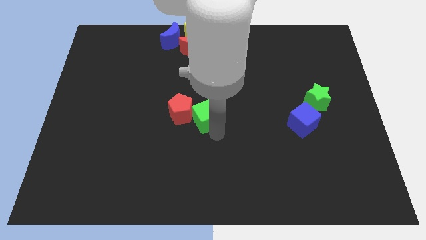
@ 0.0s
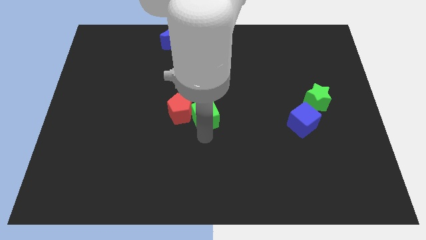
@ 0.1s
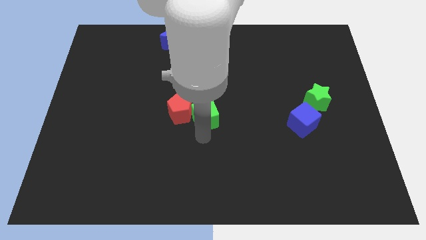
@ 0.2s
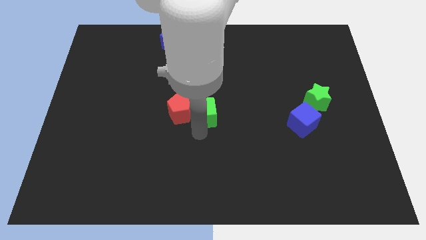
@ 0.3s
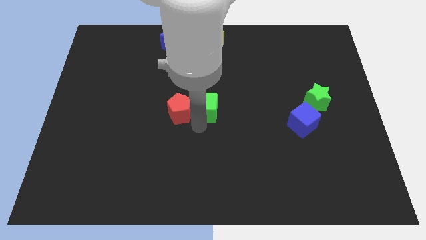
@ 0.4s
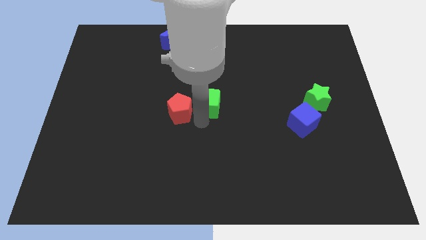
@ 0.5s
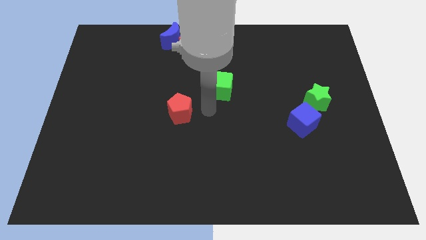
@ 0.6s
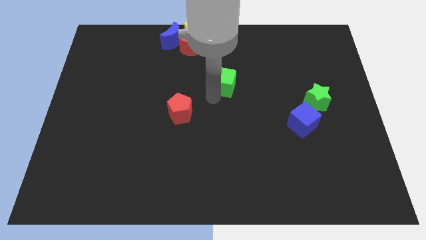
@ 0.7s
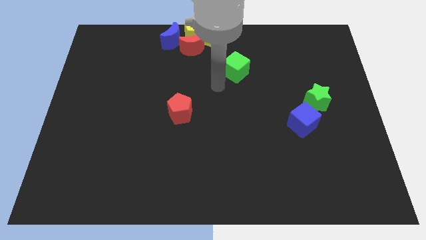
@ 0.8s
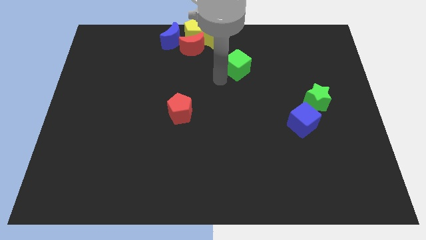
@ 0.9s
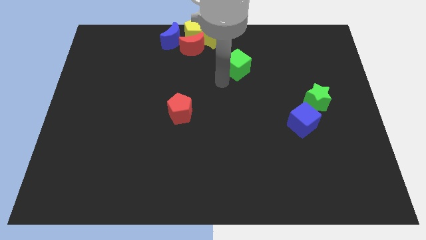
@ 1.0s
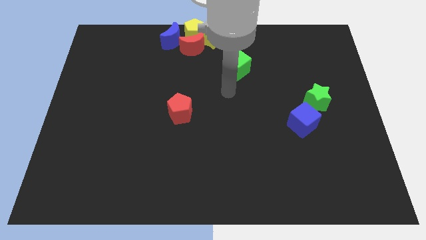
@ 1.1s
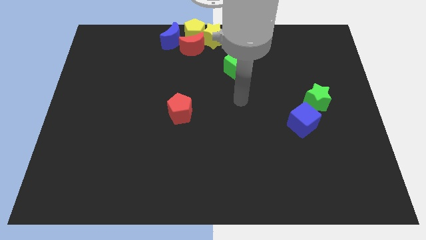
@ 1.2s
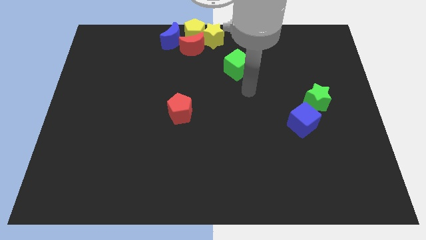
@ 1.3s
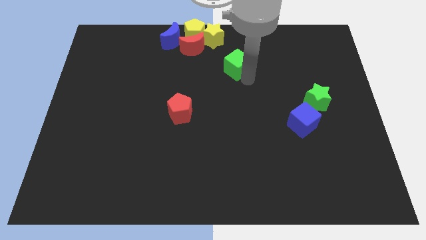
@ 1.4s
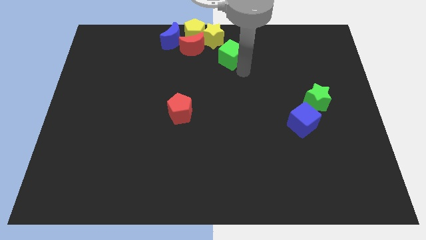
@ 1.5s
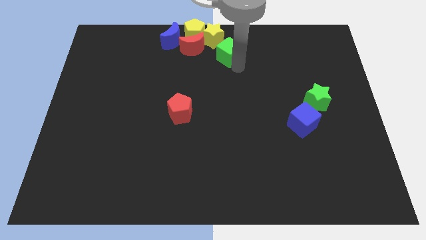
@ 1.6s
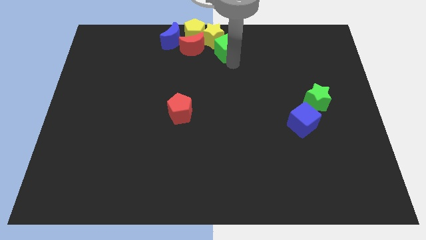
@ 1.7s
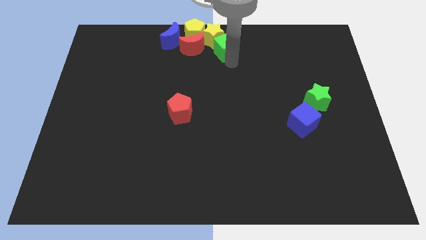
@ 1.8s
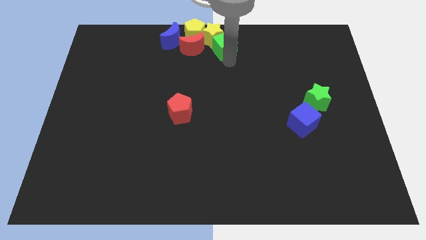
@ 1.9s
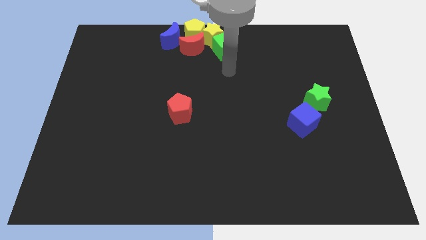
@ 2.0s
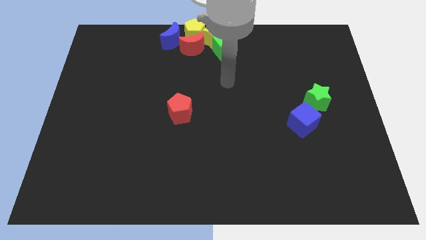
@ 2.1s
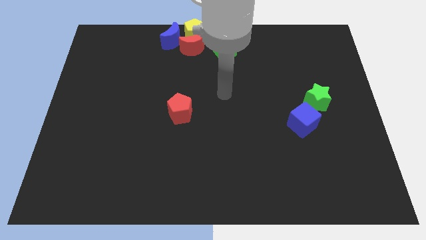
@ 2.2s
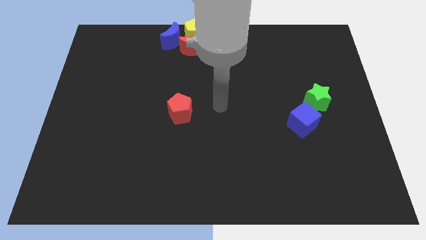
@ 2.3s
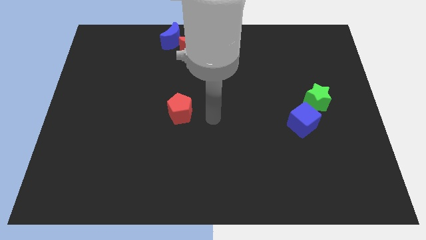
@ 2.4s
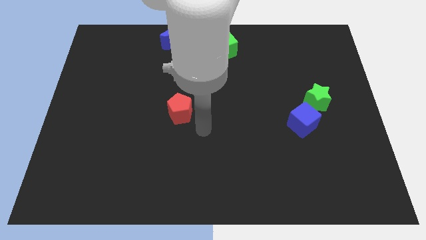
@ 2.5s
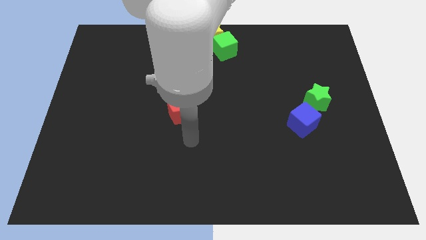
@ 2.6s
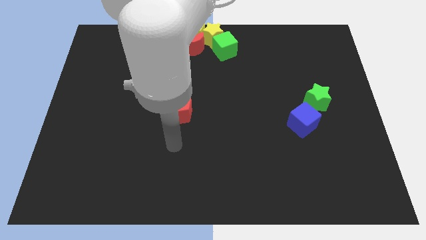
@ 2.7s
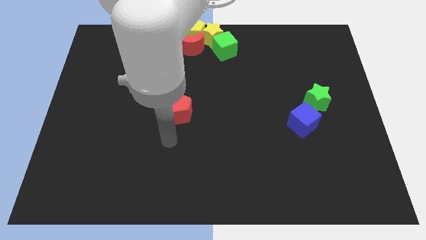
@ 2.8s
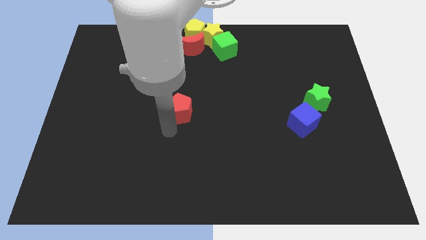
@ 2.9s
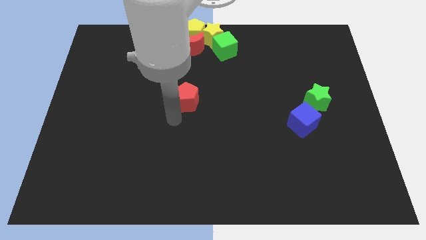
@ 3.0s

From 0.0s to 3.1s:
separate green cube from red pentagon

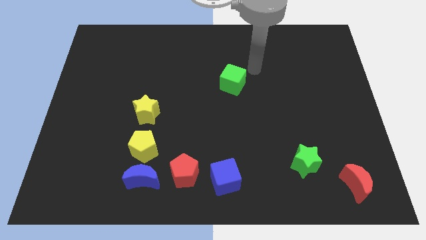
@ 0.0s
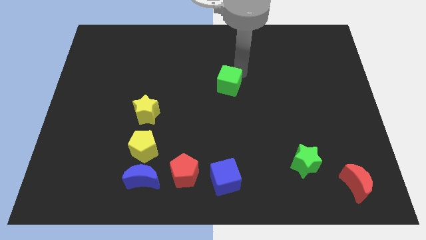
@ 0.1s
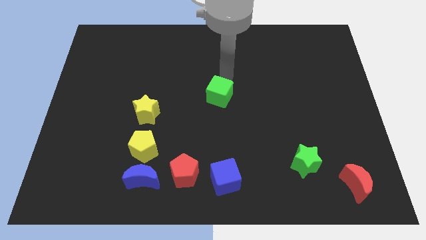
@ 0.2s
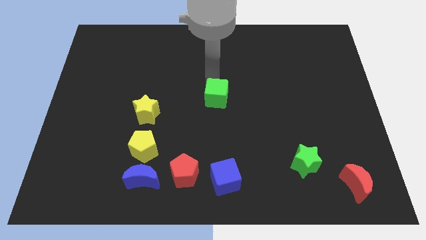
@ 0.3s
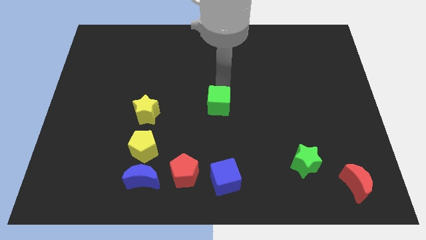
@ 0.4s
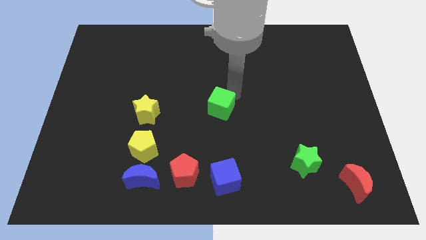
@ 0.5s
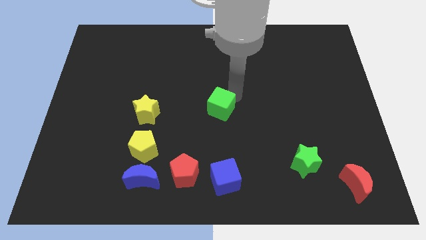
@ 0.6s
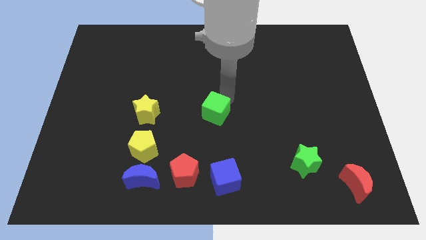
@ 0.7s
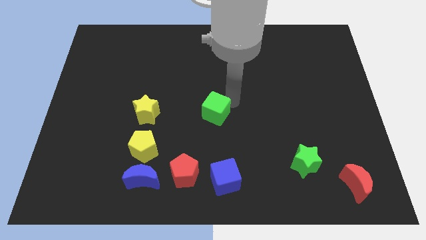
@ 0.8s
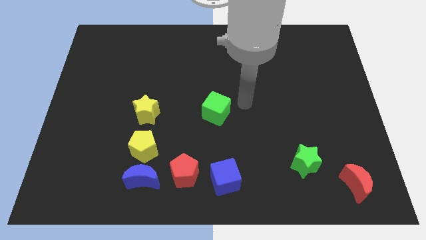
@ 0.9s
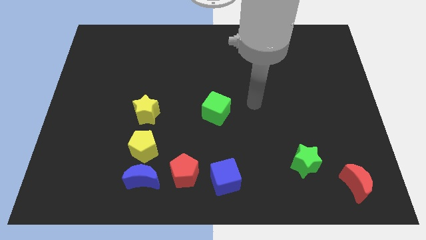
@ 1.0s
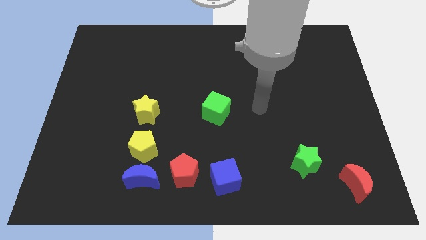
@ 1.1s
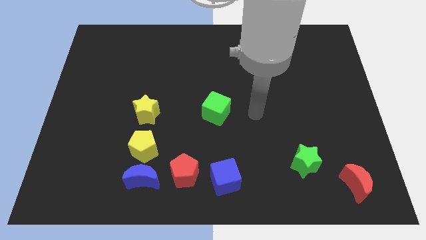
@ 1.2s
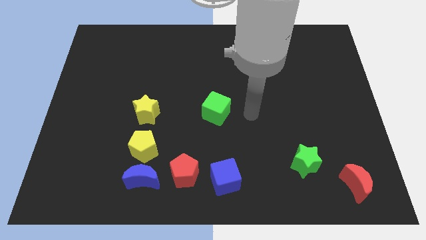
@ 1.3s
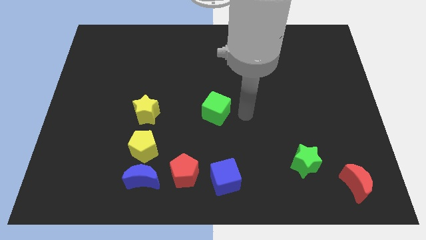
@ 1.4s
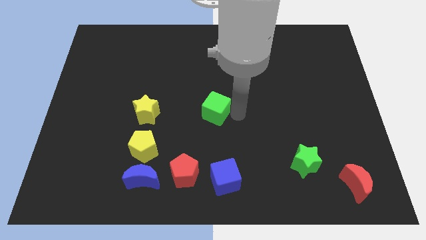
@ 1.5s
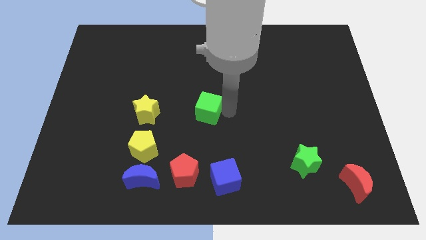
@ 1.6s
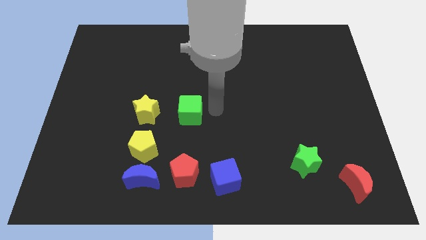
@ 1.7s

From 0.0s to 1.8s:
push the green cube to the vertical top of the red pentagon

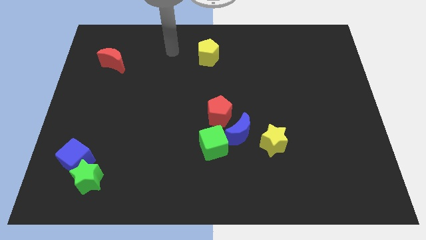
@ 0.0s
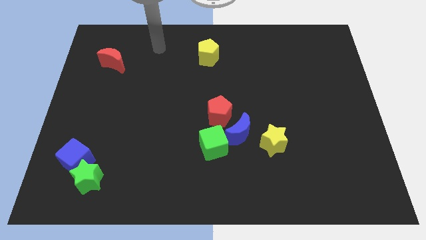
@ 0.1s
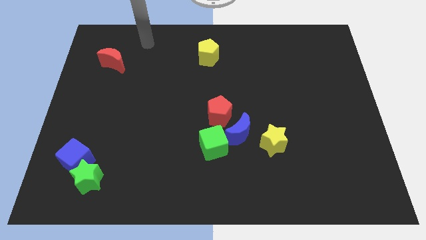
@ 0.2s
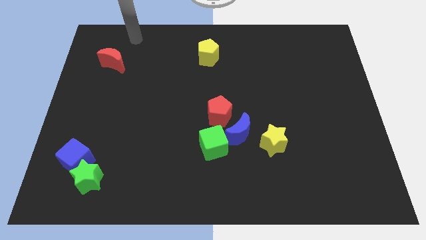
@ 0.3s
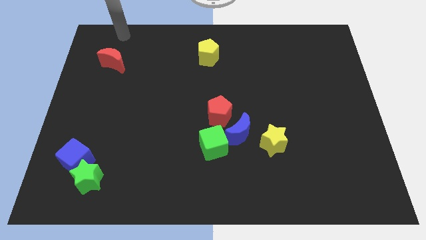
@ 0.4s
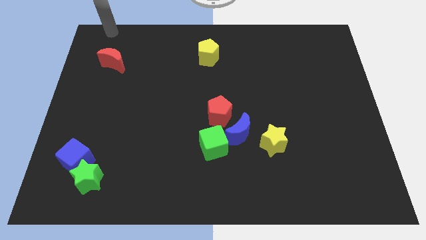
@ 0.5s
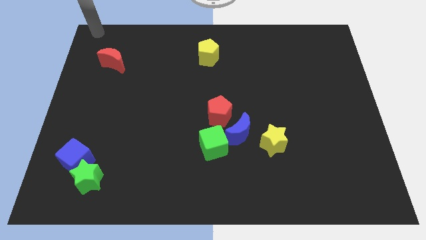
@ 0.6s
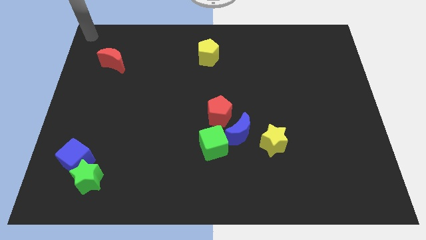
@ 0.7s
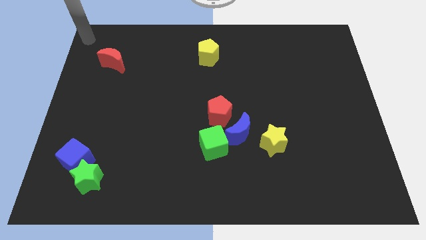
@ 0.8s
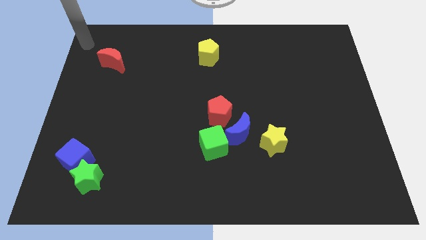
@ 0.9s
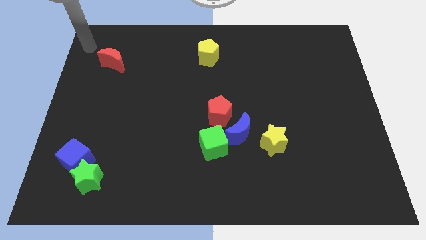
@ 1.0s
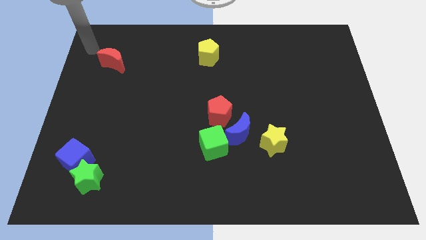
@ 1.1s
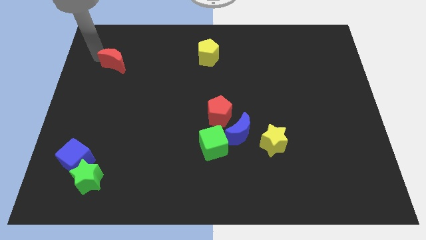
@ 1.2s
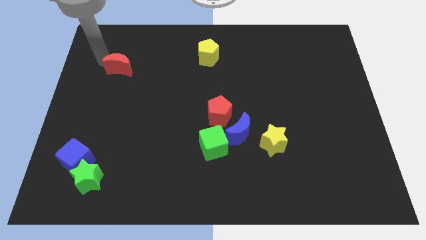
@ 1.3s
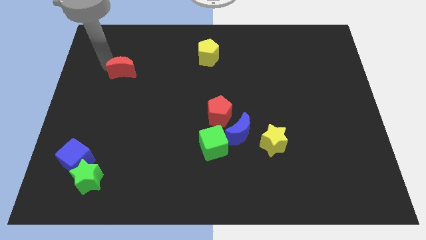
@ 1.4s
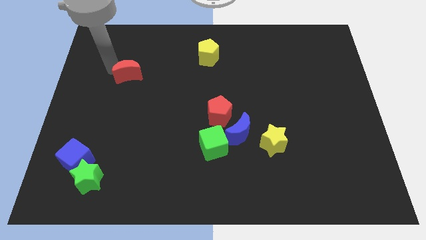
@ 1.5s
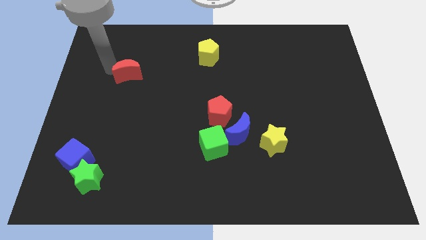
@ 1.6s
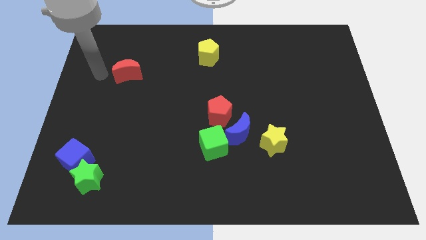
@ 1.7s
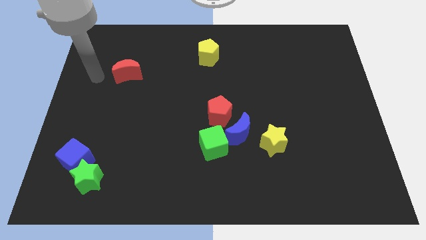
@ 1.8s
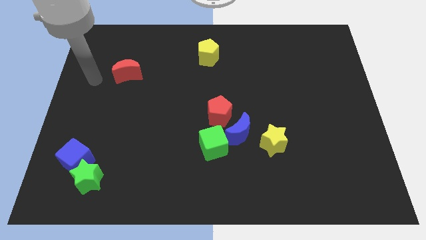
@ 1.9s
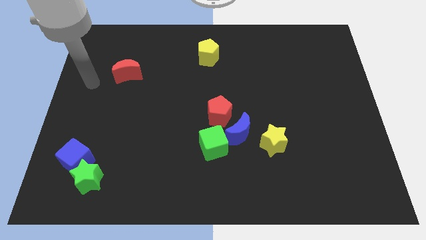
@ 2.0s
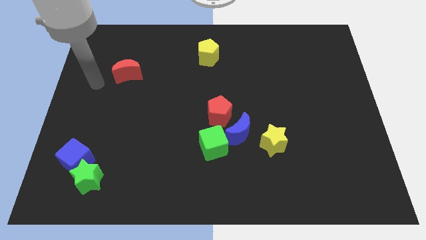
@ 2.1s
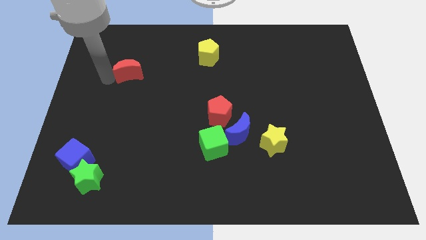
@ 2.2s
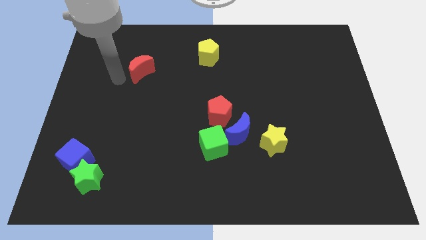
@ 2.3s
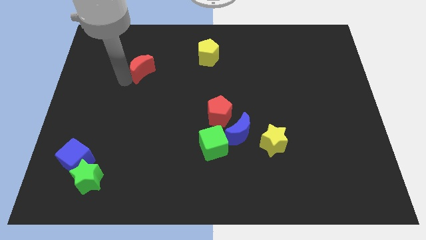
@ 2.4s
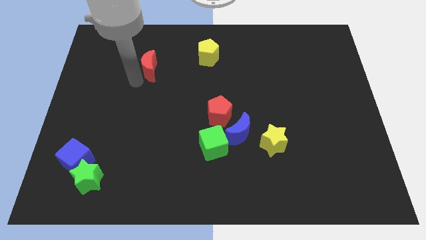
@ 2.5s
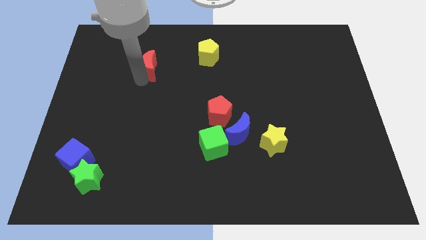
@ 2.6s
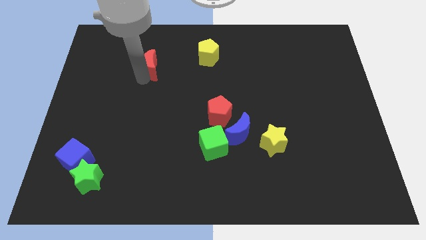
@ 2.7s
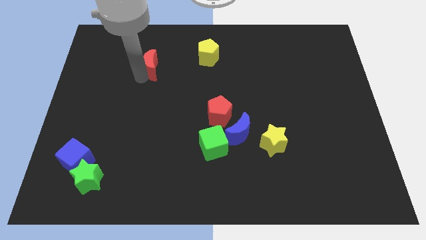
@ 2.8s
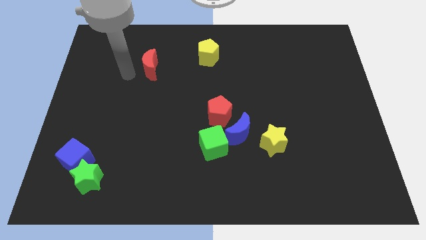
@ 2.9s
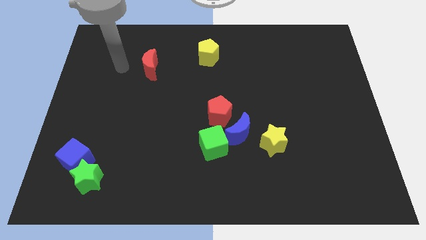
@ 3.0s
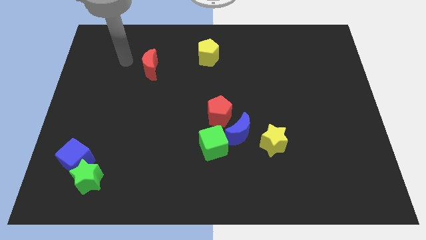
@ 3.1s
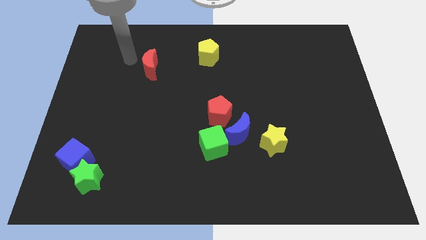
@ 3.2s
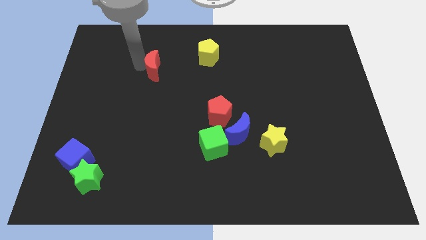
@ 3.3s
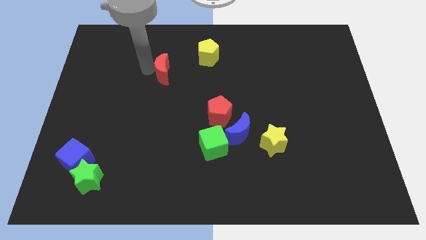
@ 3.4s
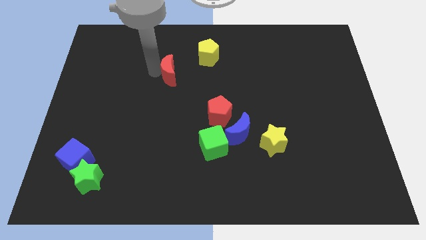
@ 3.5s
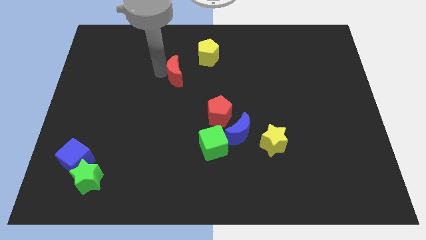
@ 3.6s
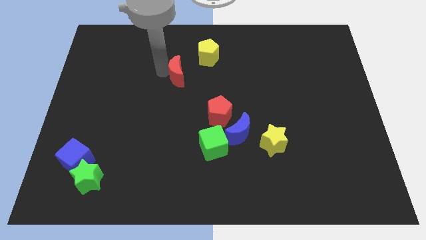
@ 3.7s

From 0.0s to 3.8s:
put the red crescent to the bottom left of the yellow pentagon

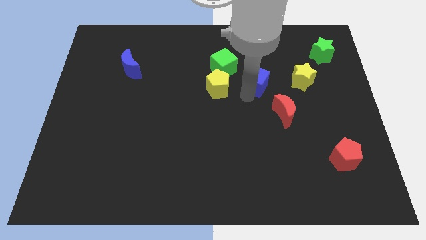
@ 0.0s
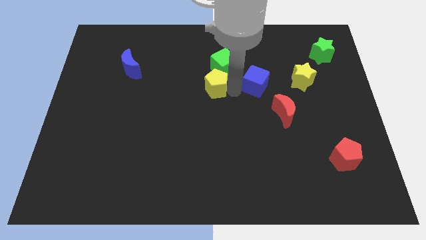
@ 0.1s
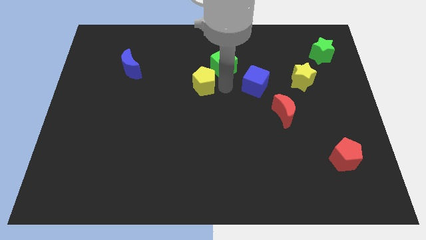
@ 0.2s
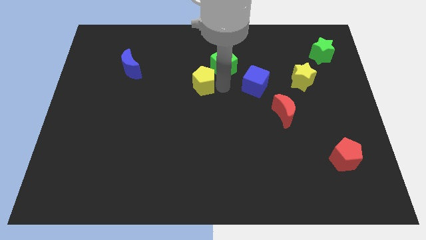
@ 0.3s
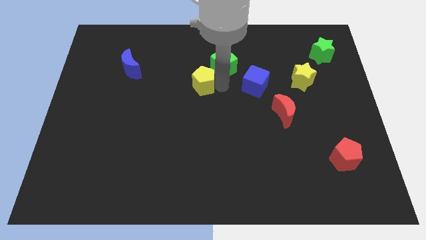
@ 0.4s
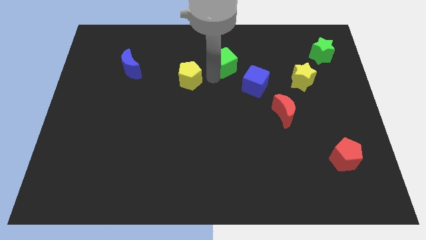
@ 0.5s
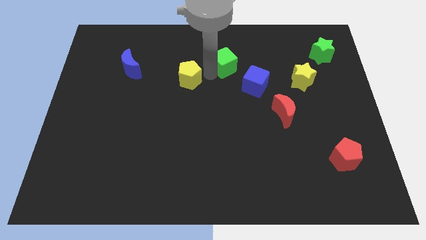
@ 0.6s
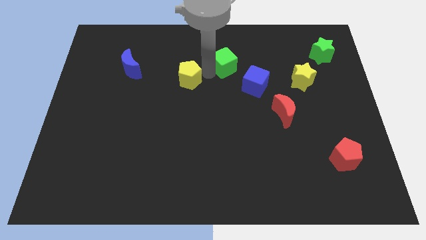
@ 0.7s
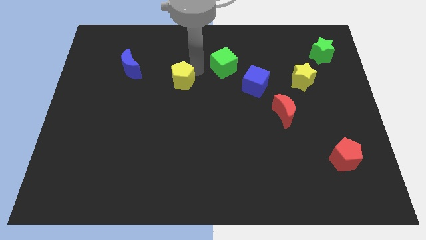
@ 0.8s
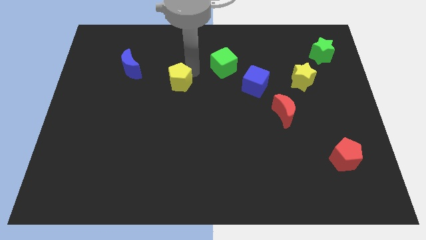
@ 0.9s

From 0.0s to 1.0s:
push the yellow pentagon away from the green cube
